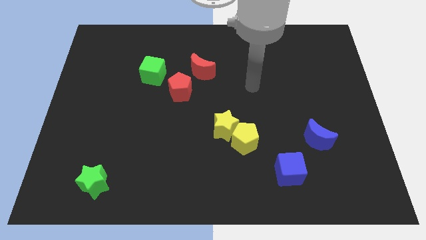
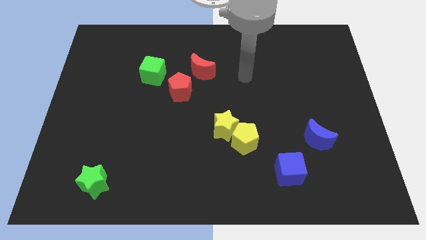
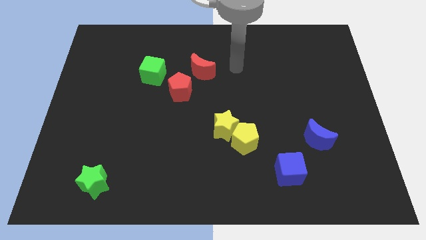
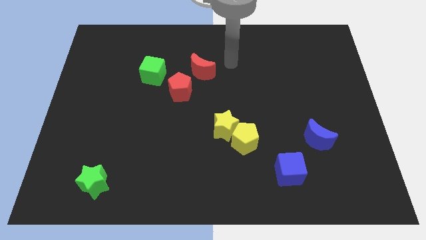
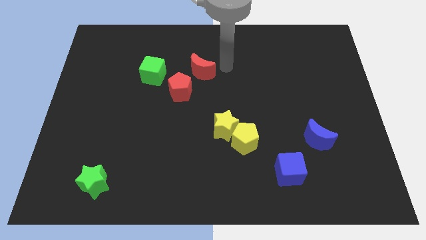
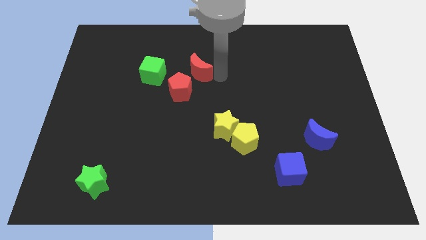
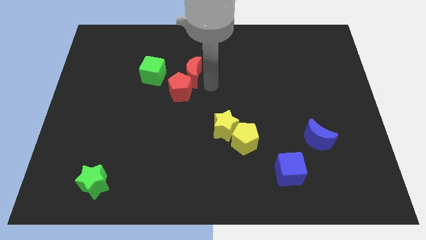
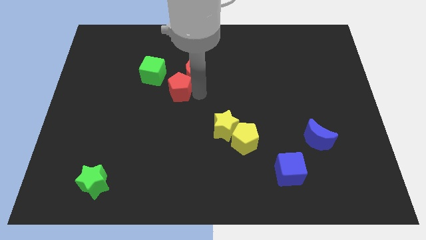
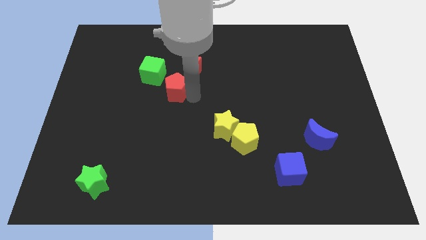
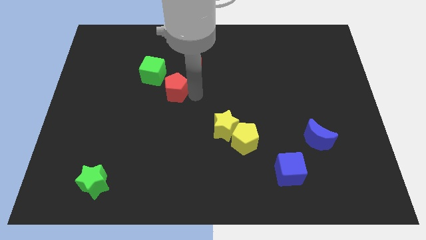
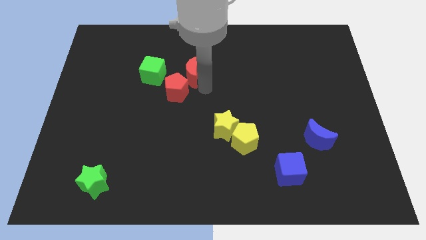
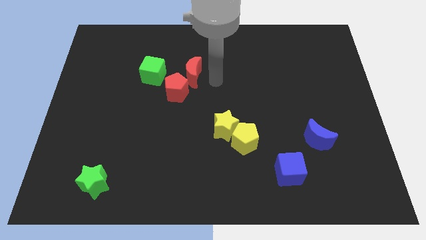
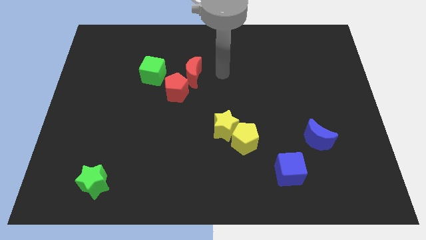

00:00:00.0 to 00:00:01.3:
move the red moon into the red pentagon

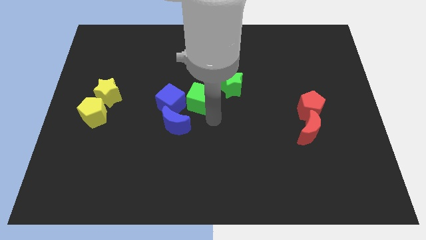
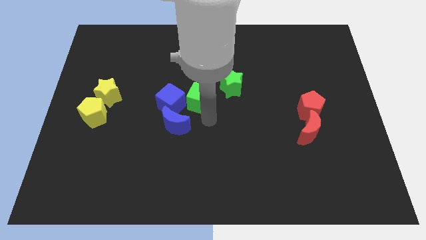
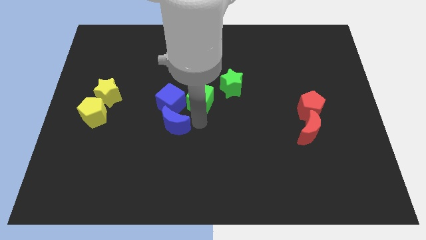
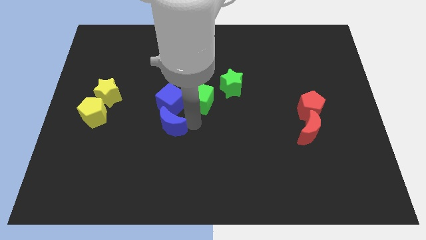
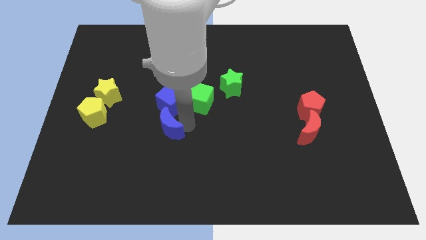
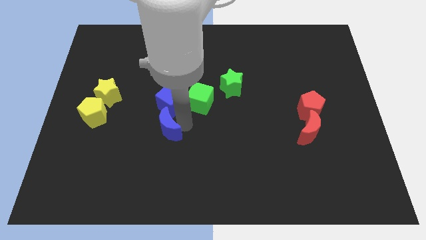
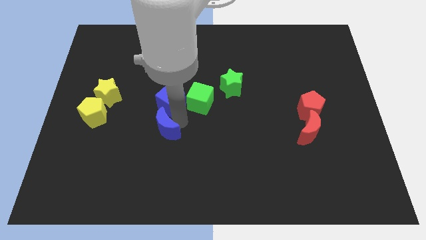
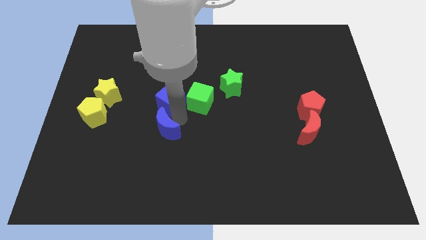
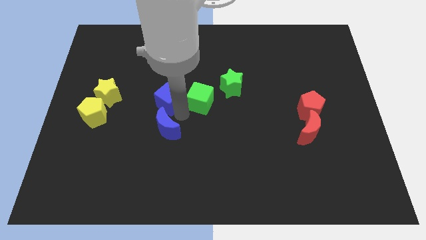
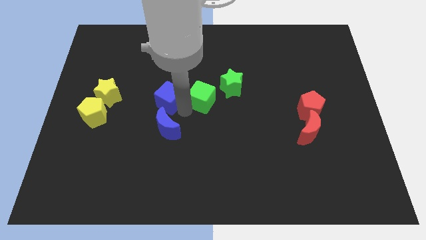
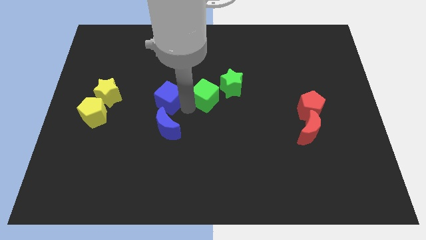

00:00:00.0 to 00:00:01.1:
separate the green cube and blue crescent from the blue cube

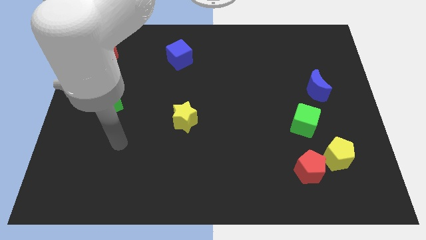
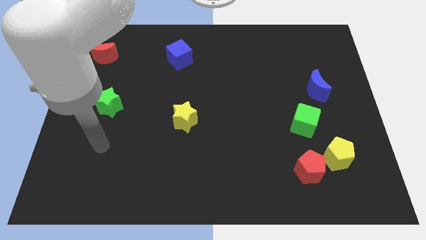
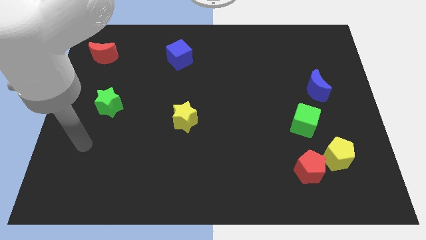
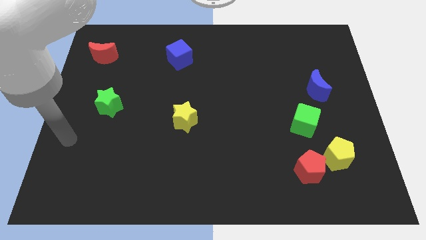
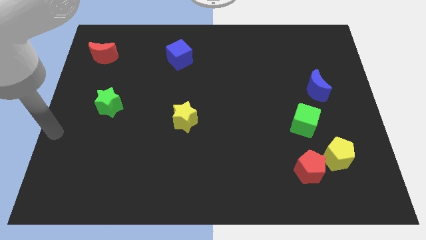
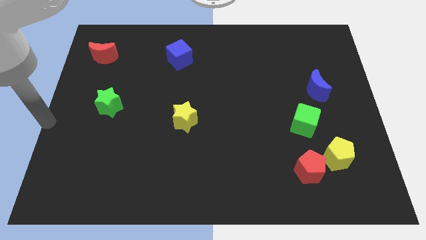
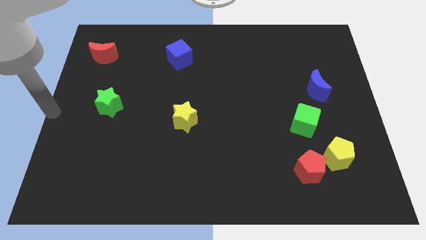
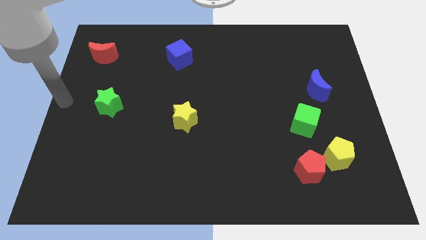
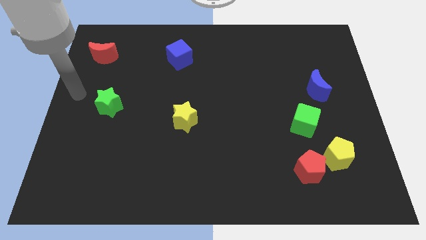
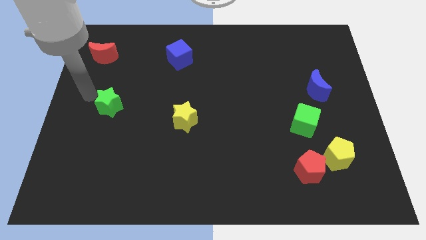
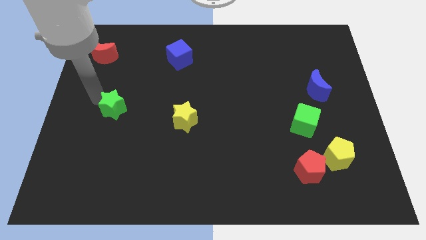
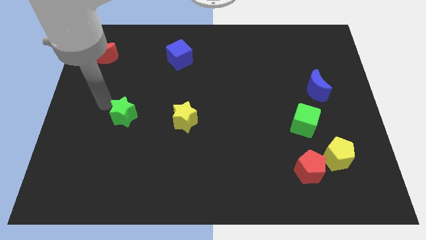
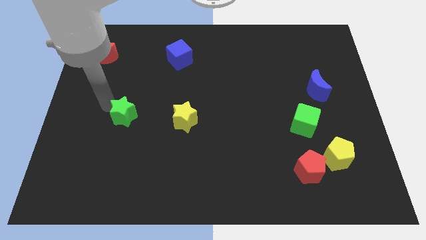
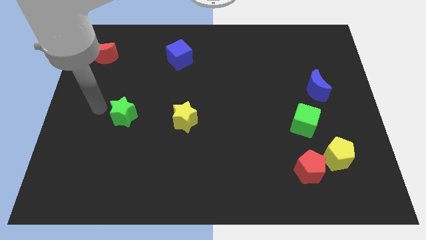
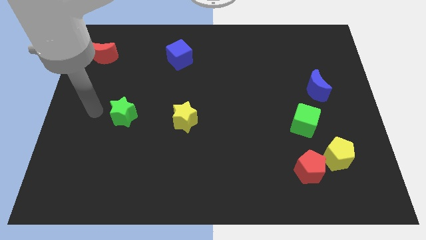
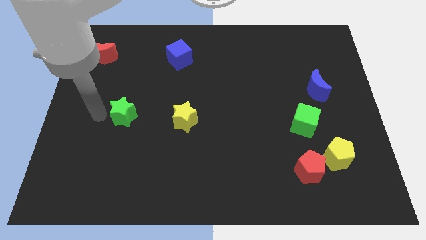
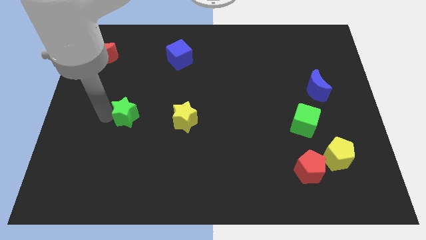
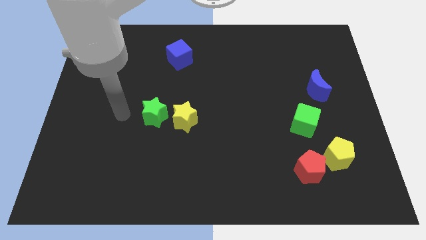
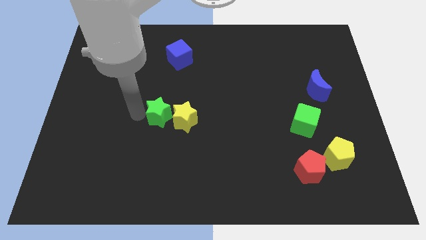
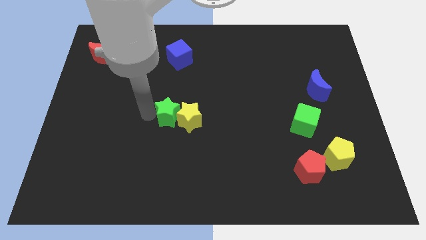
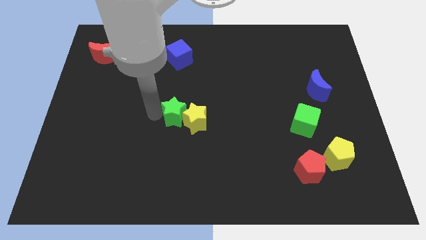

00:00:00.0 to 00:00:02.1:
slide the green star into the left side of the yellow star

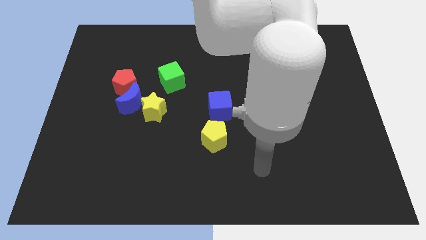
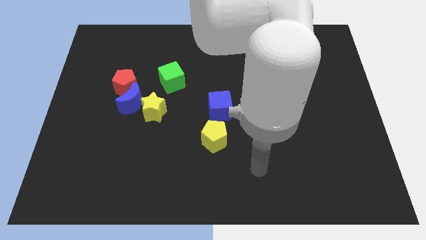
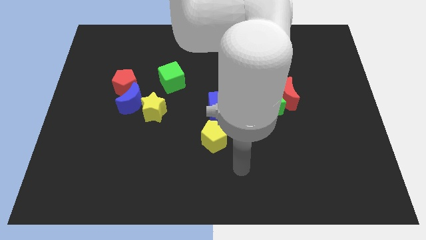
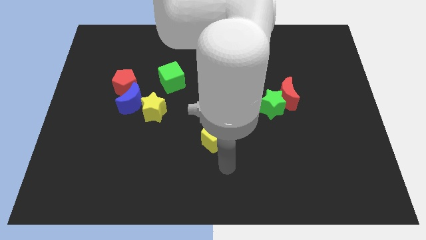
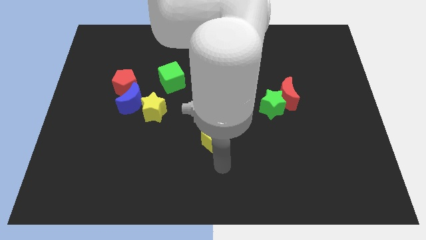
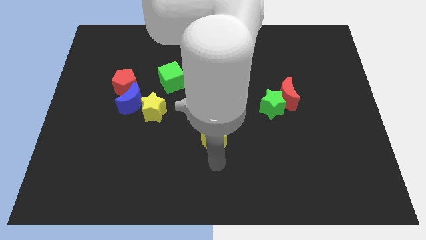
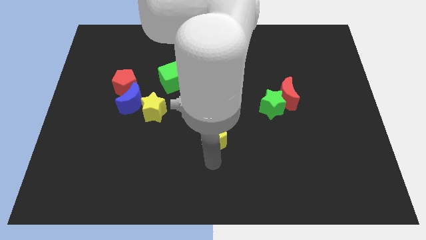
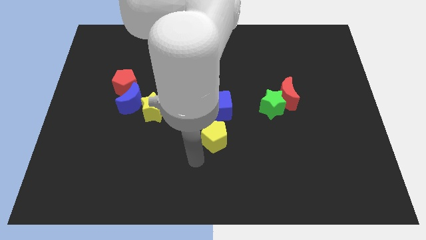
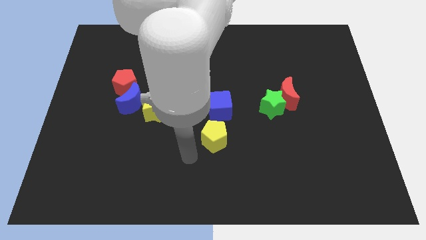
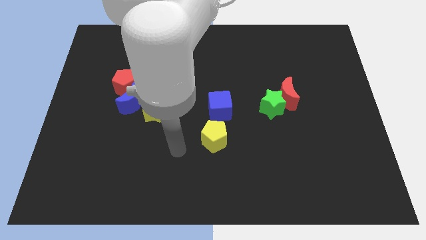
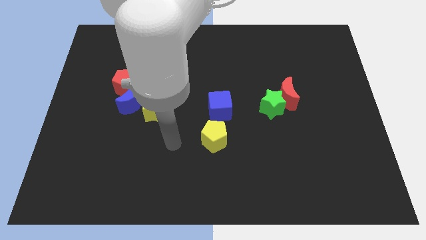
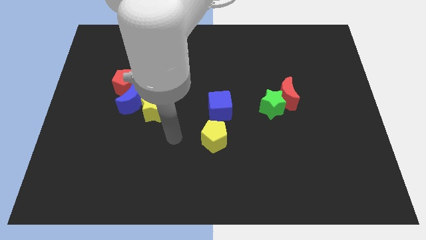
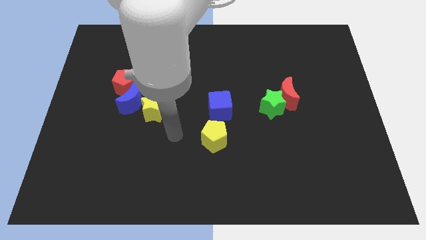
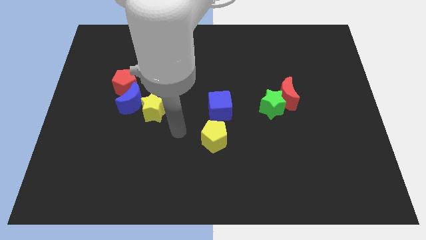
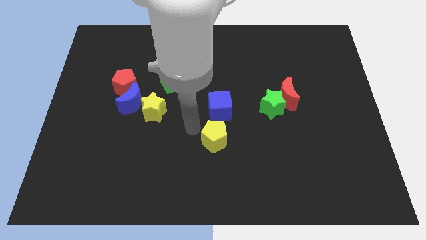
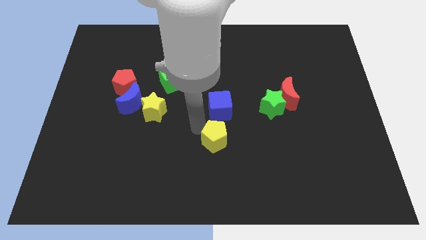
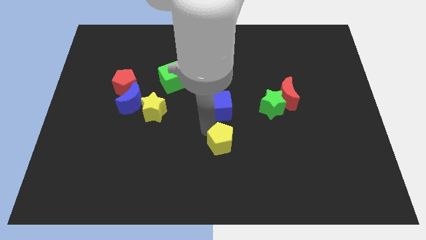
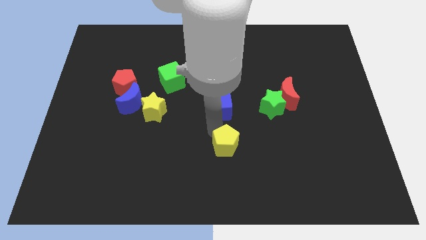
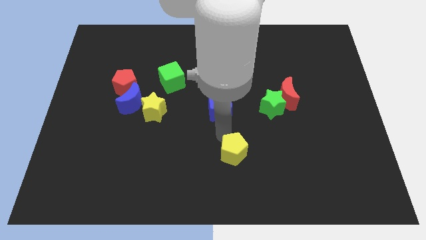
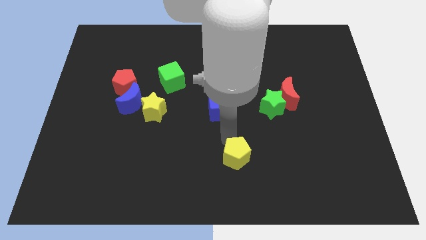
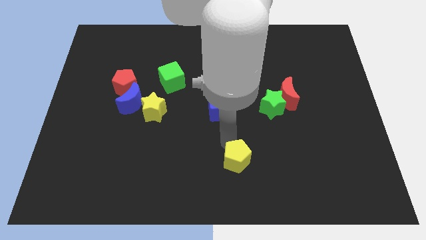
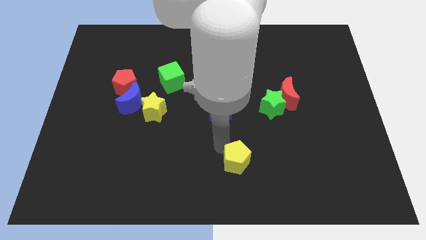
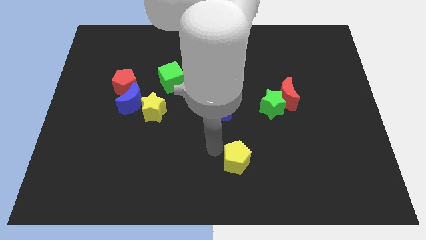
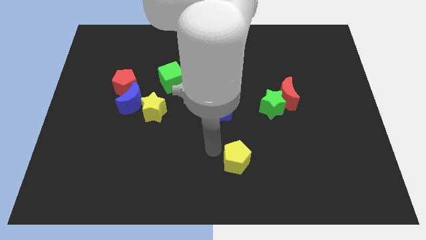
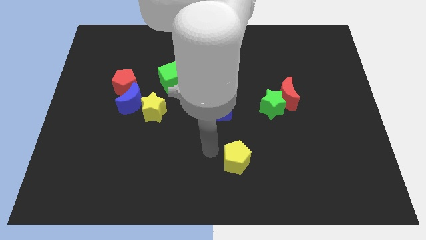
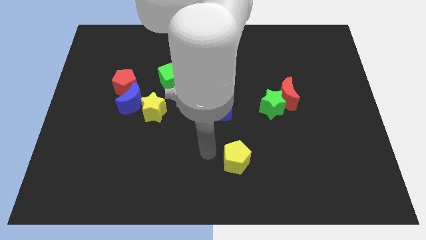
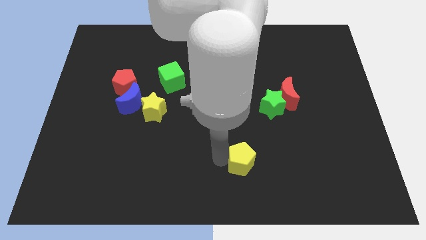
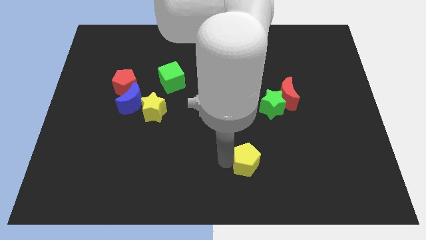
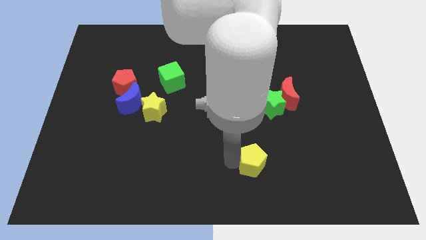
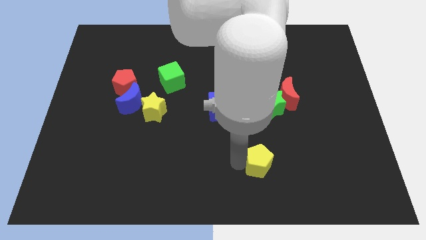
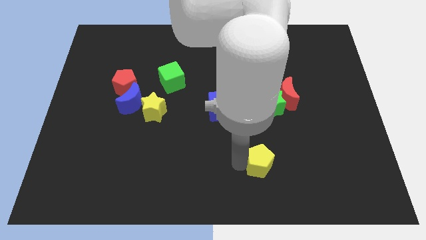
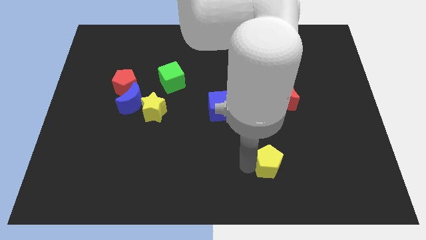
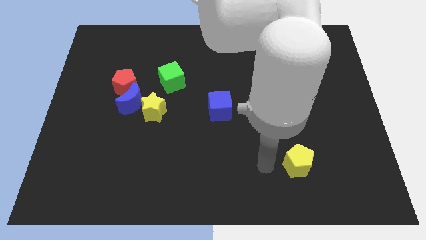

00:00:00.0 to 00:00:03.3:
push the yellow pentagon to the bottom of the green star

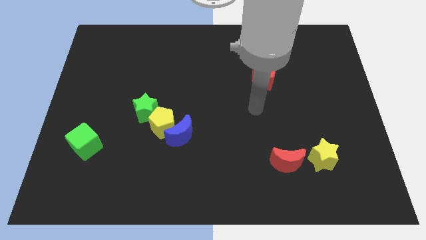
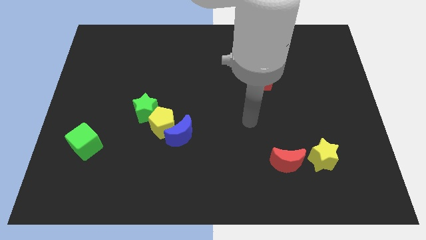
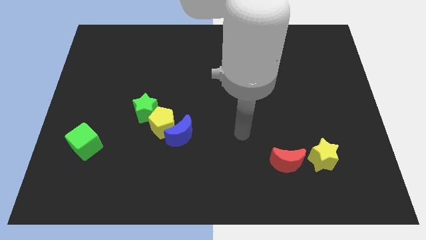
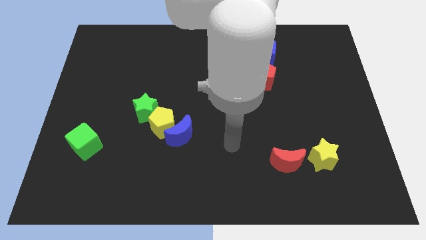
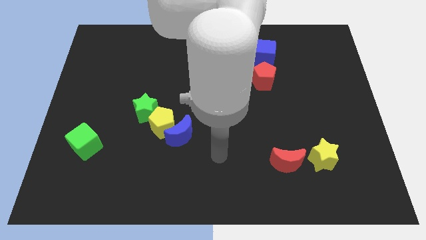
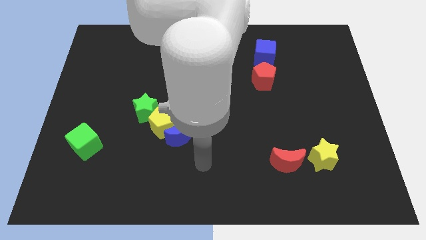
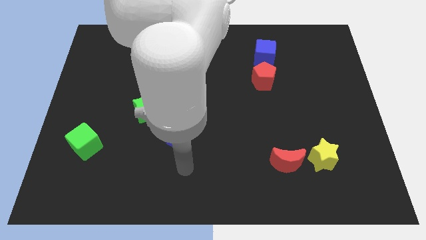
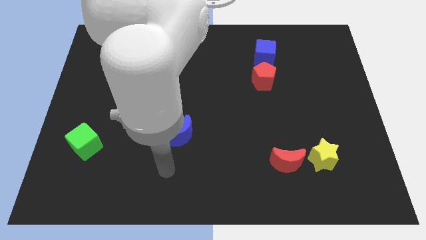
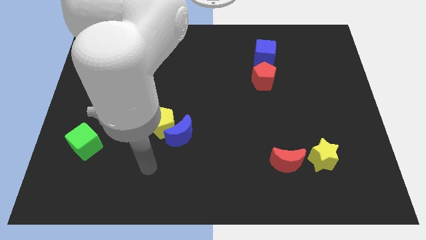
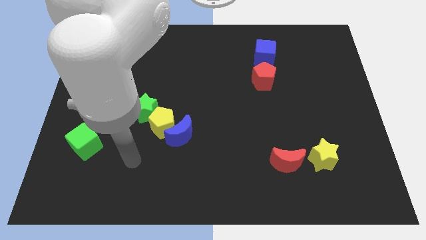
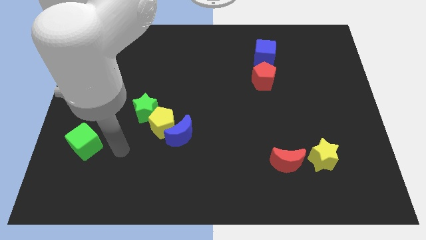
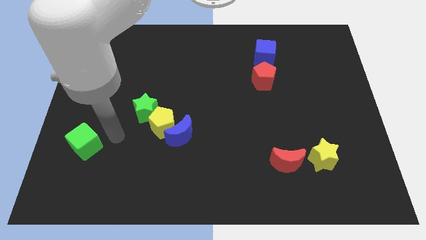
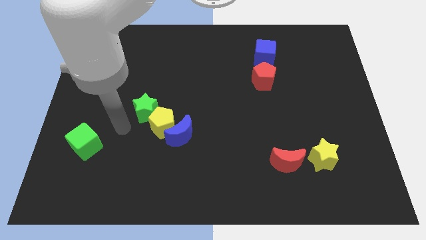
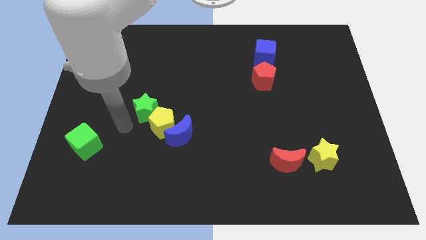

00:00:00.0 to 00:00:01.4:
move your arm to the bottom of green star
